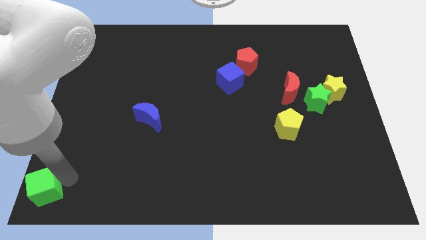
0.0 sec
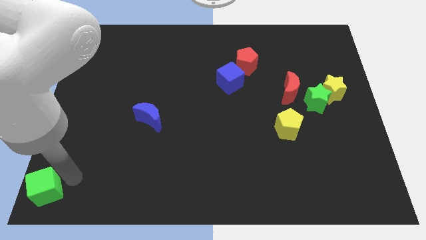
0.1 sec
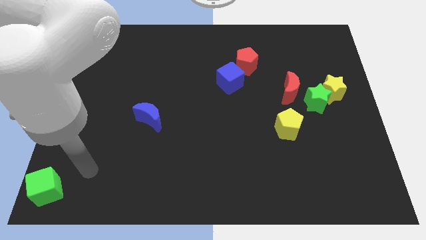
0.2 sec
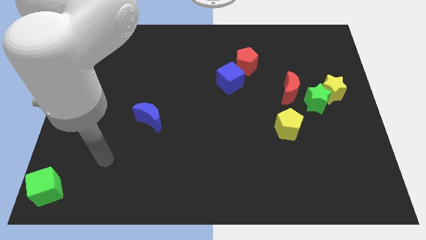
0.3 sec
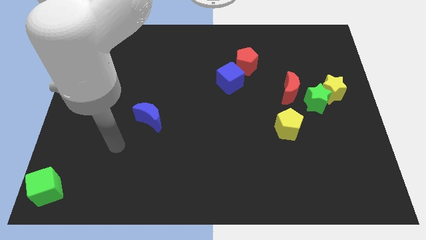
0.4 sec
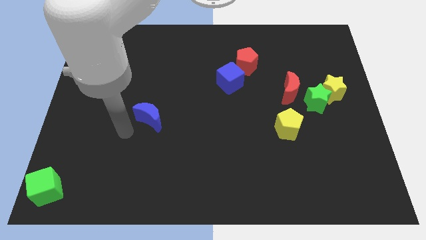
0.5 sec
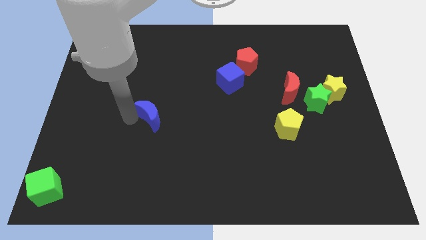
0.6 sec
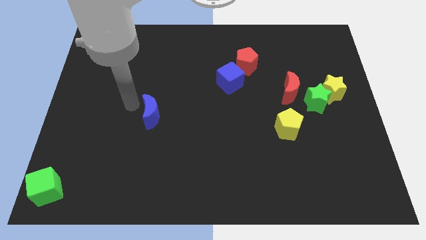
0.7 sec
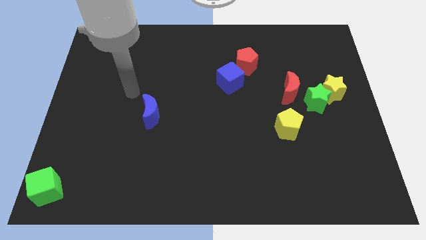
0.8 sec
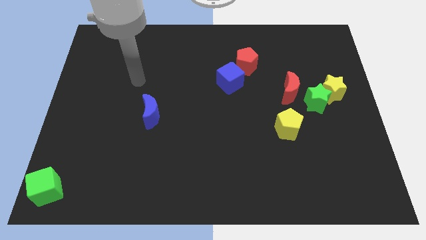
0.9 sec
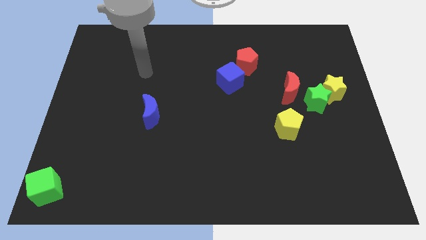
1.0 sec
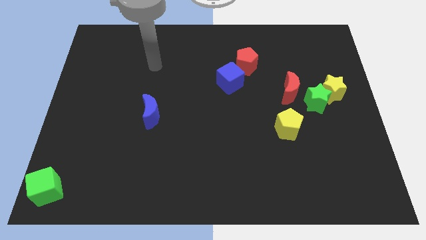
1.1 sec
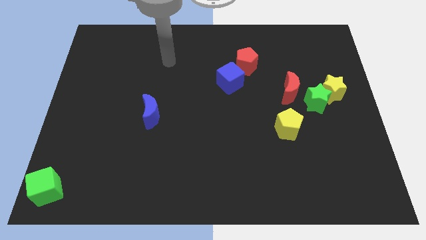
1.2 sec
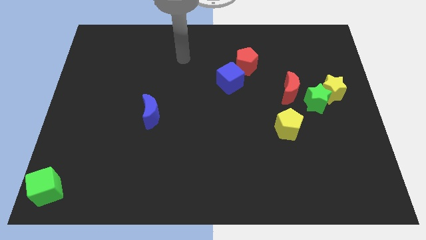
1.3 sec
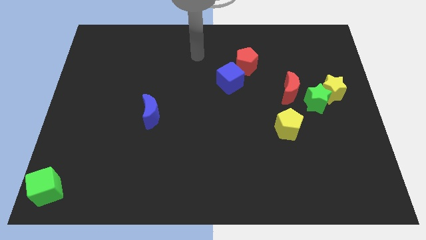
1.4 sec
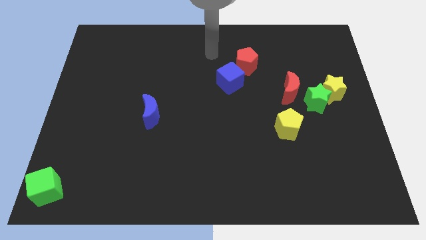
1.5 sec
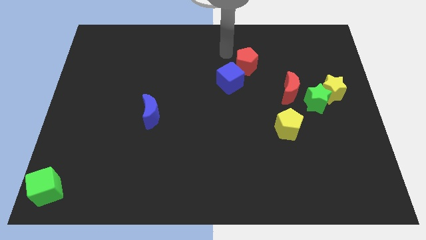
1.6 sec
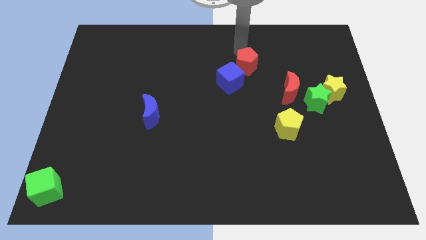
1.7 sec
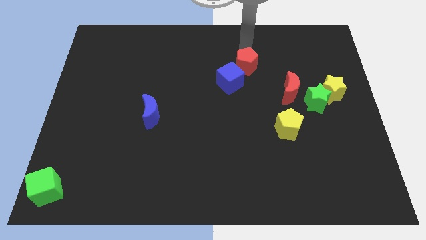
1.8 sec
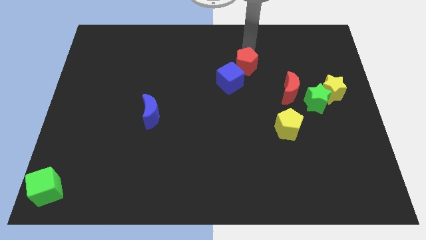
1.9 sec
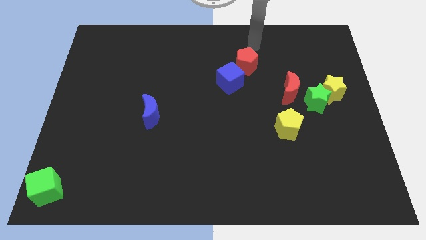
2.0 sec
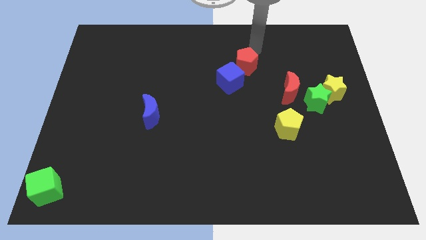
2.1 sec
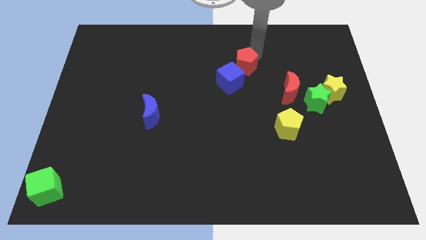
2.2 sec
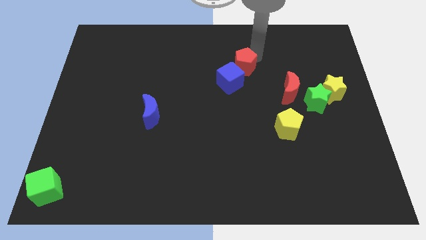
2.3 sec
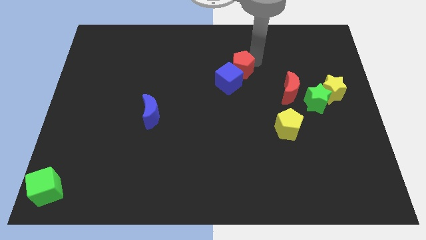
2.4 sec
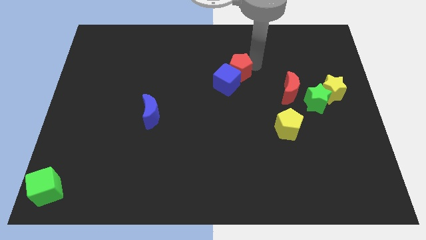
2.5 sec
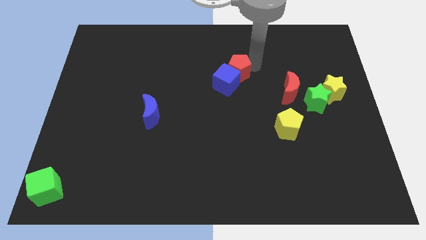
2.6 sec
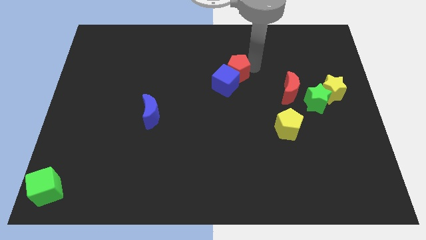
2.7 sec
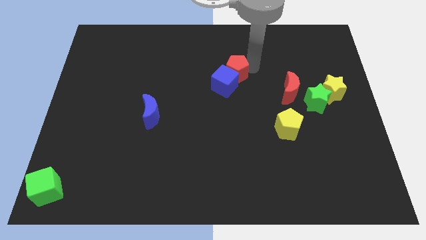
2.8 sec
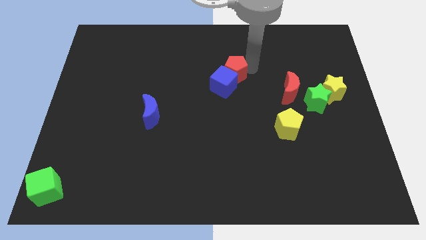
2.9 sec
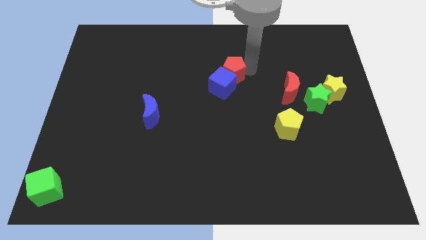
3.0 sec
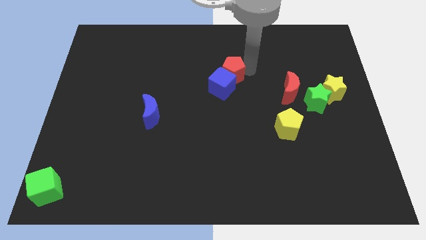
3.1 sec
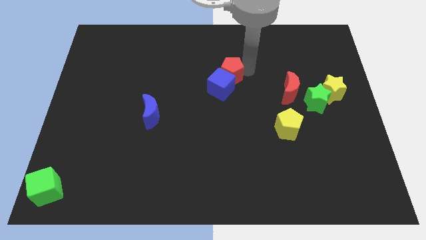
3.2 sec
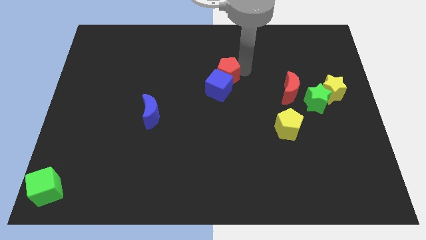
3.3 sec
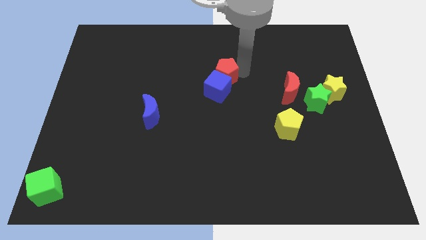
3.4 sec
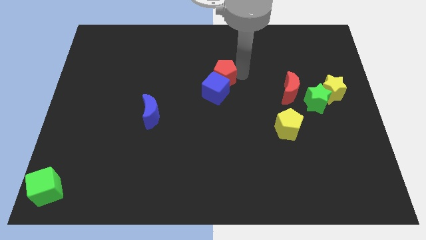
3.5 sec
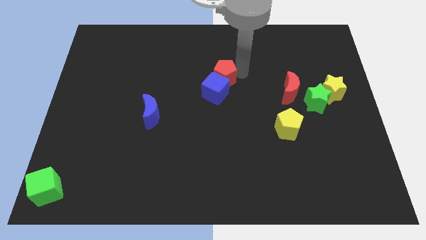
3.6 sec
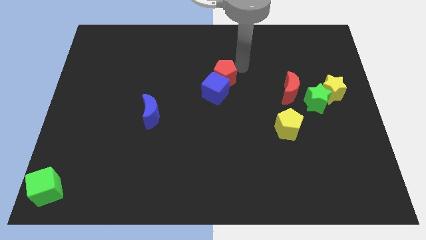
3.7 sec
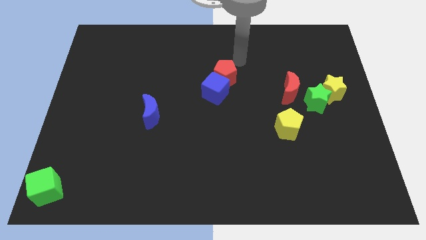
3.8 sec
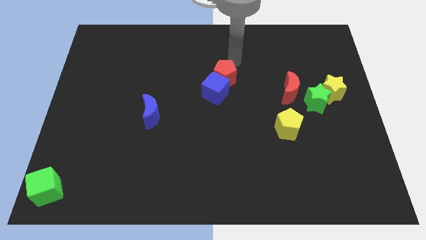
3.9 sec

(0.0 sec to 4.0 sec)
move the red pentagon into the blue cube

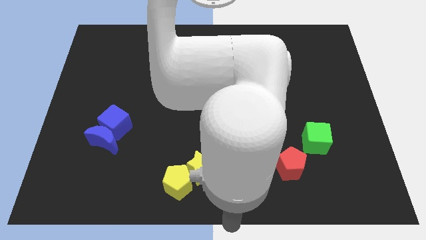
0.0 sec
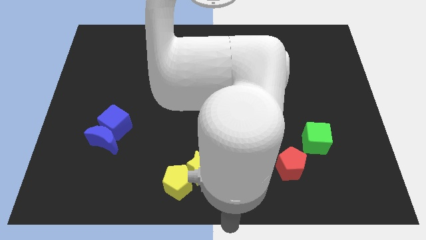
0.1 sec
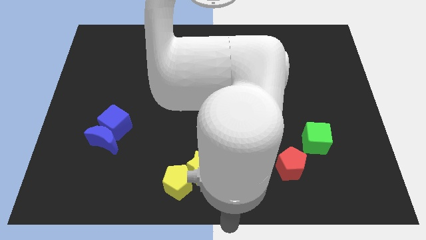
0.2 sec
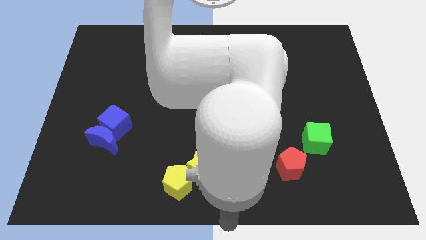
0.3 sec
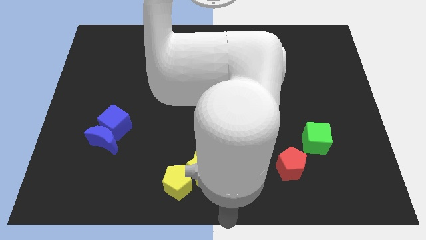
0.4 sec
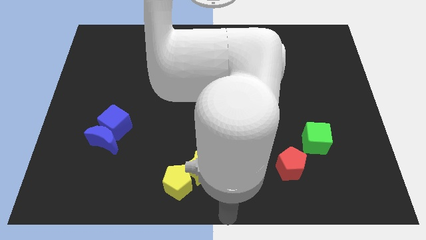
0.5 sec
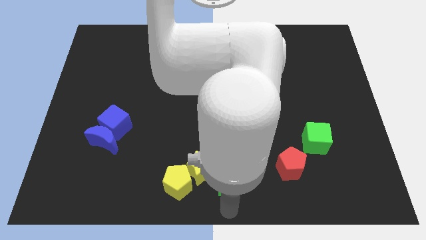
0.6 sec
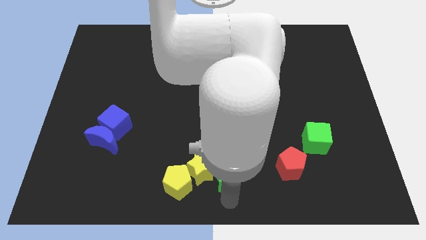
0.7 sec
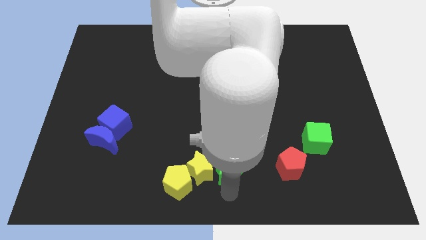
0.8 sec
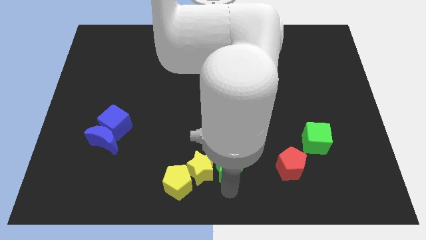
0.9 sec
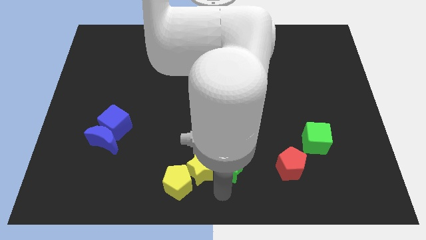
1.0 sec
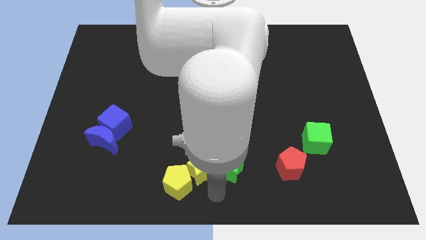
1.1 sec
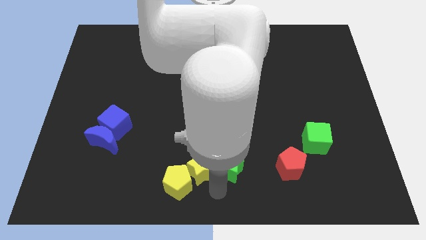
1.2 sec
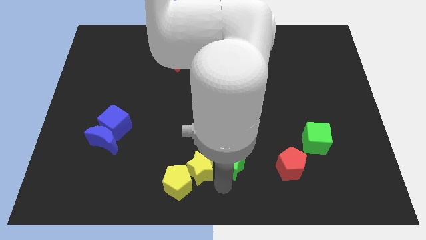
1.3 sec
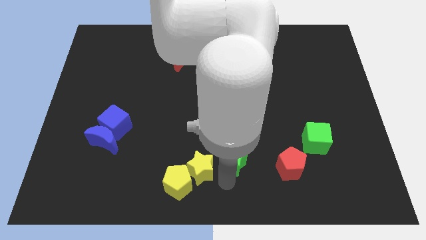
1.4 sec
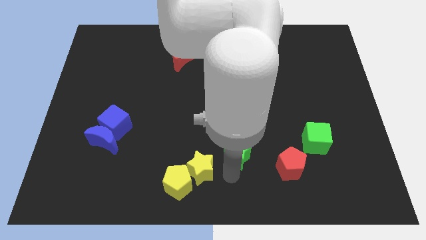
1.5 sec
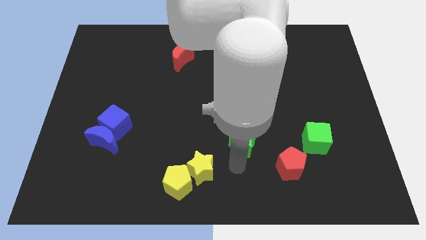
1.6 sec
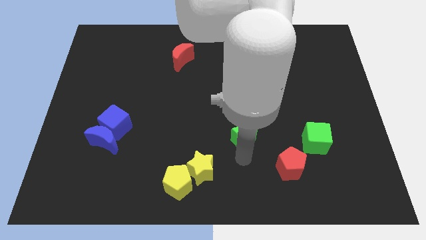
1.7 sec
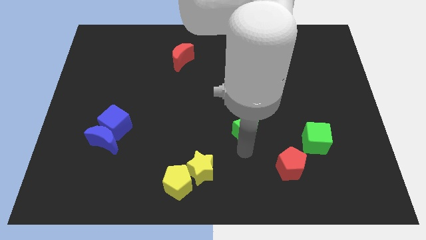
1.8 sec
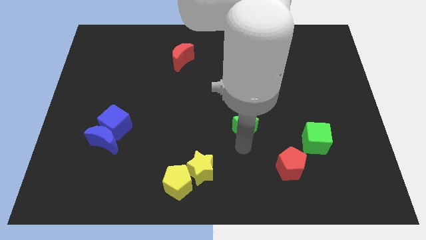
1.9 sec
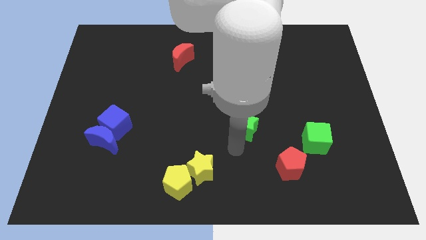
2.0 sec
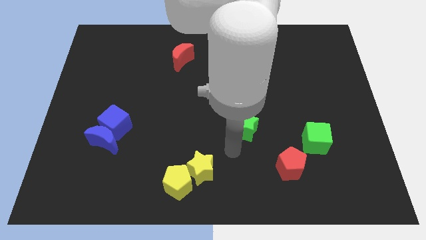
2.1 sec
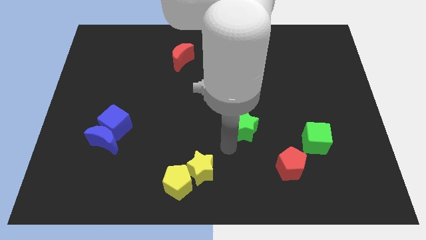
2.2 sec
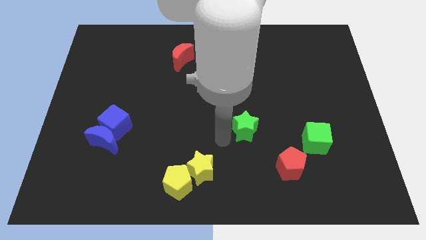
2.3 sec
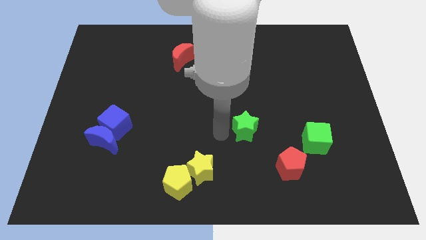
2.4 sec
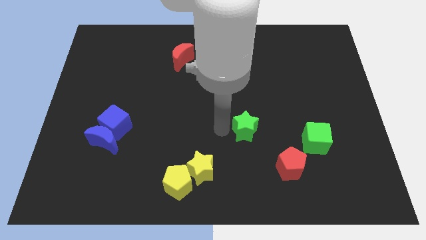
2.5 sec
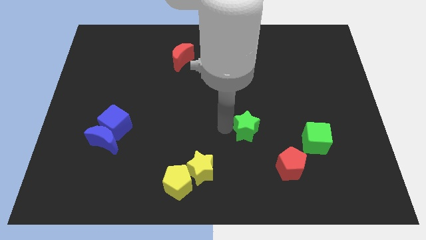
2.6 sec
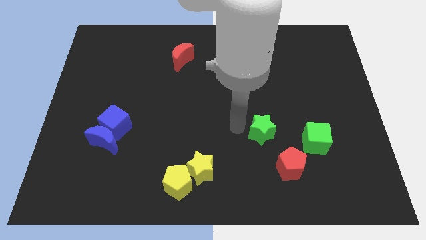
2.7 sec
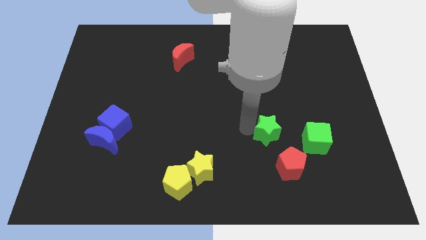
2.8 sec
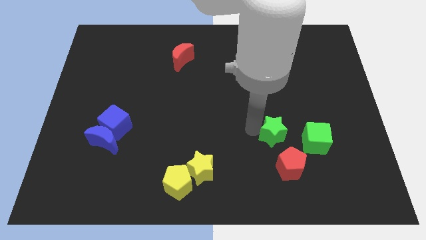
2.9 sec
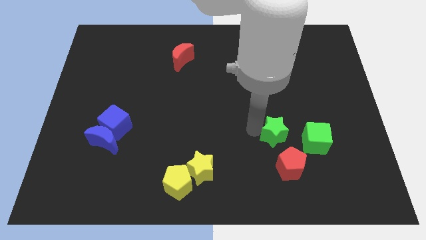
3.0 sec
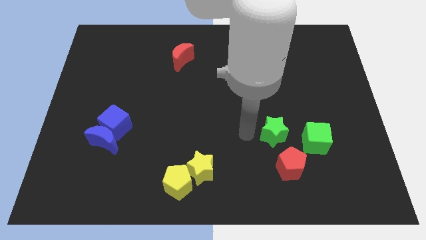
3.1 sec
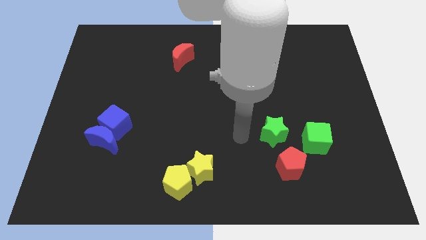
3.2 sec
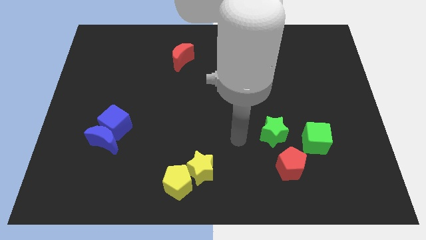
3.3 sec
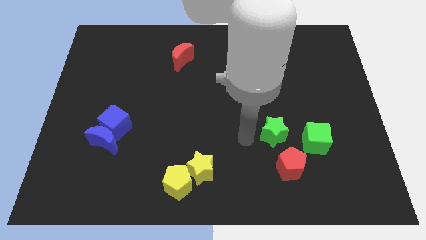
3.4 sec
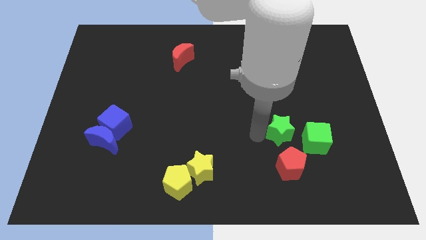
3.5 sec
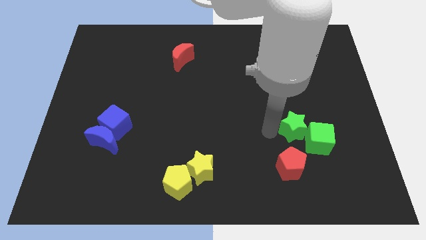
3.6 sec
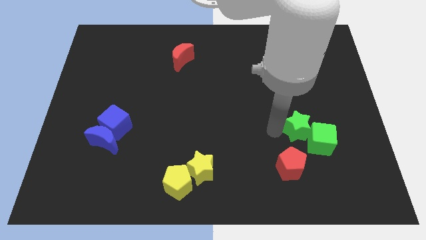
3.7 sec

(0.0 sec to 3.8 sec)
push the green star into the green cube

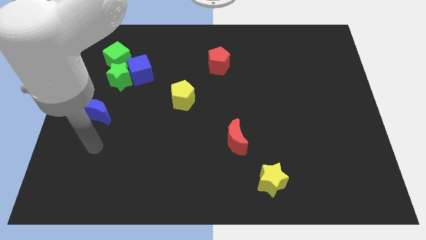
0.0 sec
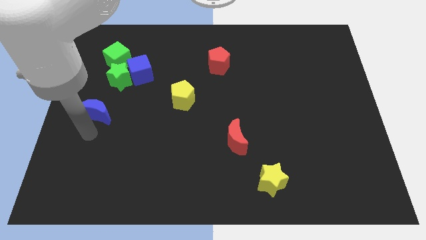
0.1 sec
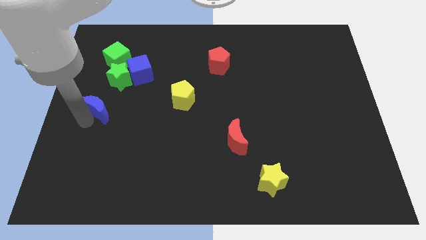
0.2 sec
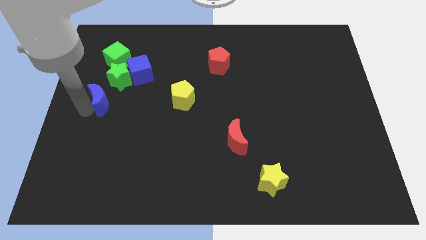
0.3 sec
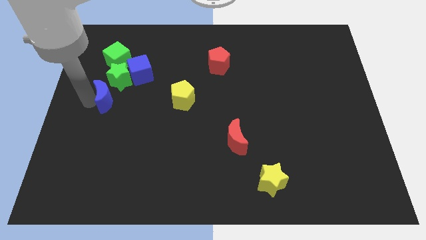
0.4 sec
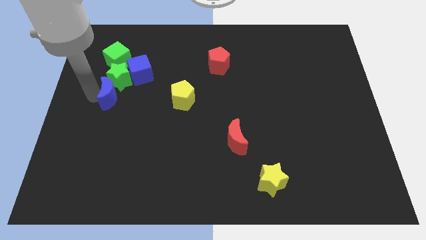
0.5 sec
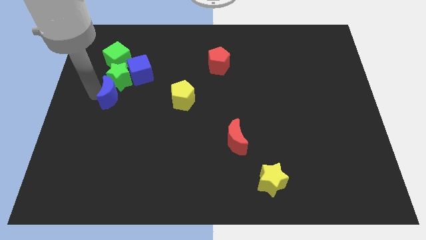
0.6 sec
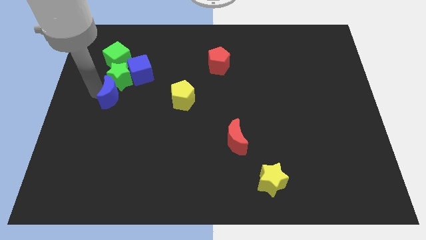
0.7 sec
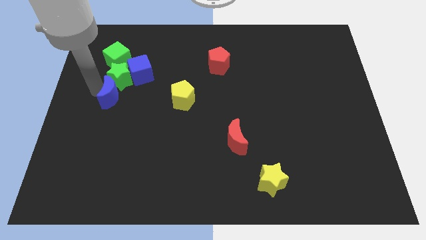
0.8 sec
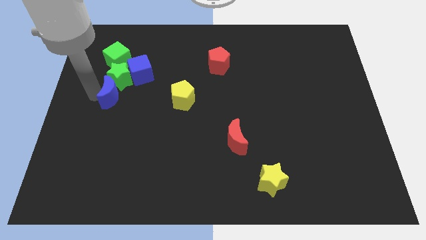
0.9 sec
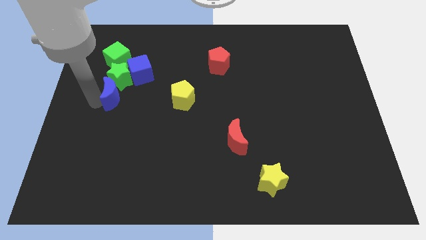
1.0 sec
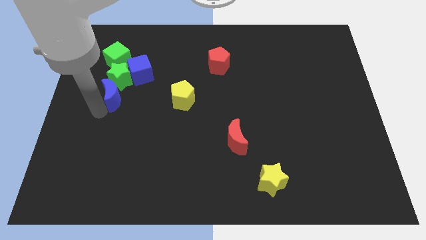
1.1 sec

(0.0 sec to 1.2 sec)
push blue crescent towards green star

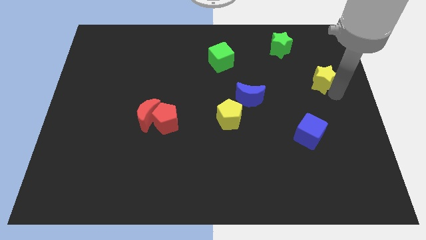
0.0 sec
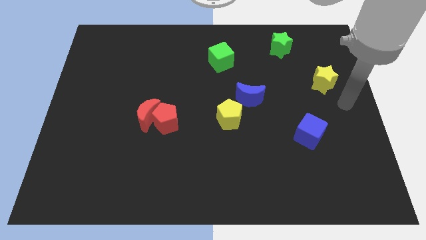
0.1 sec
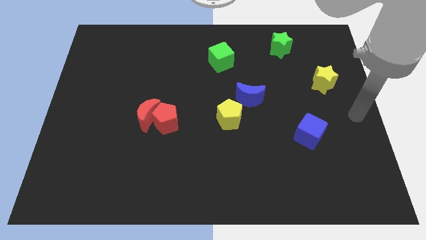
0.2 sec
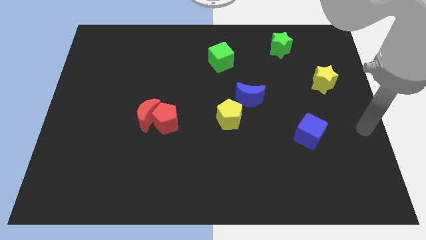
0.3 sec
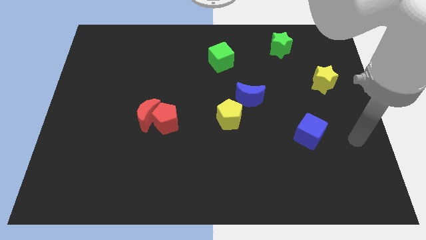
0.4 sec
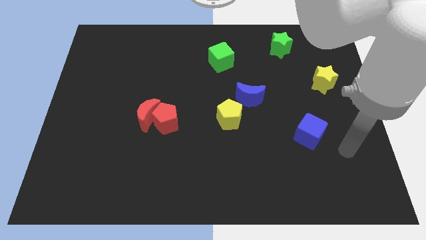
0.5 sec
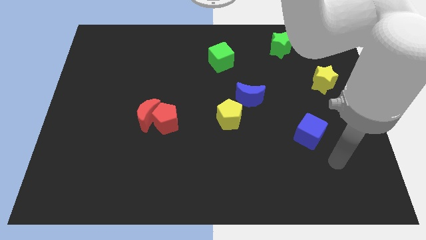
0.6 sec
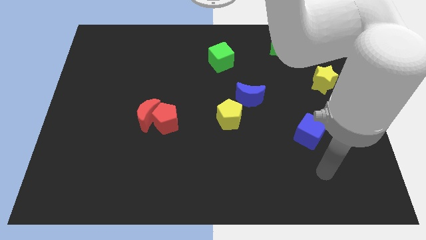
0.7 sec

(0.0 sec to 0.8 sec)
go away from the yellow star
